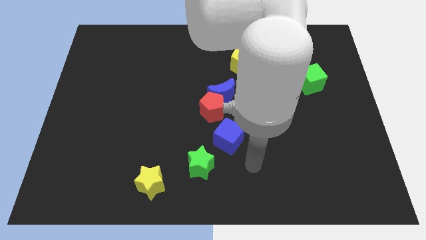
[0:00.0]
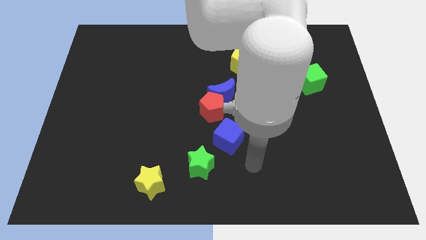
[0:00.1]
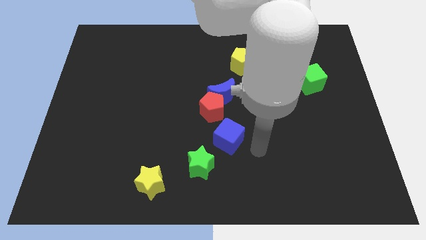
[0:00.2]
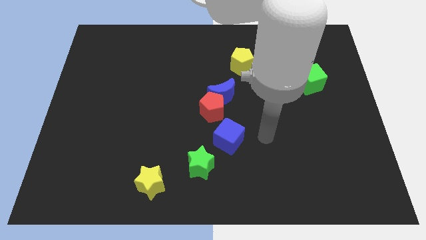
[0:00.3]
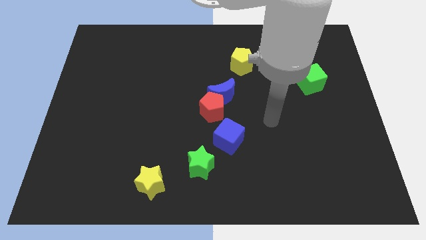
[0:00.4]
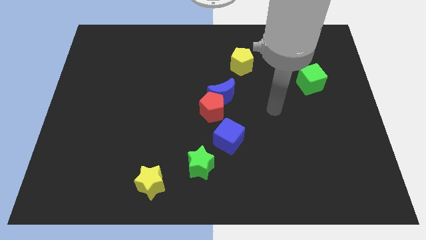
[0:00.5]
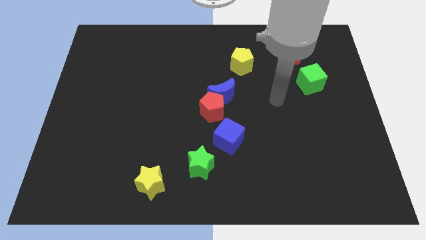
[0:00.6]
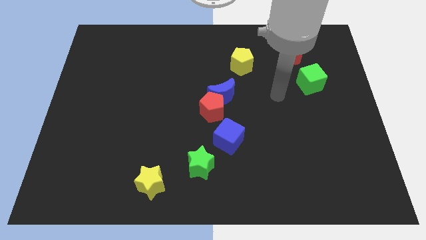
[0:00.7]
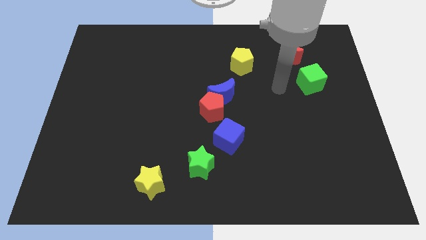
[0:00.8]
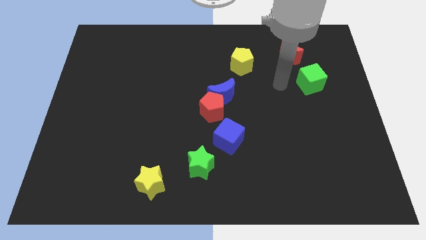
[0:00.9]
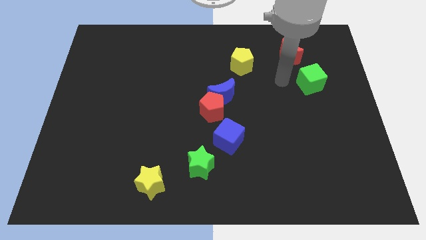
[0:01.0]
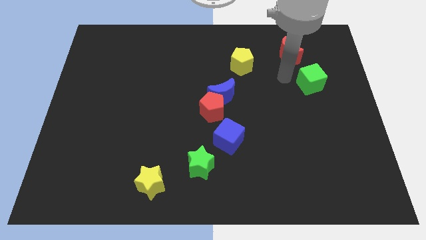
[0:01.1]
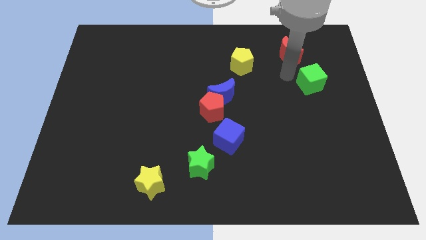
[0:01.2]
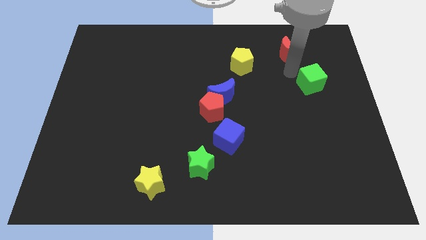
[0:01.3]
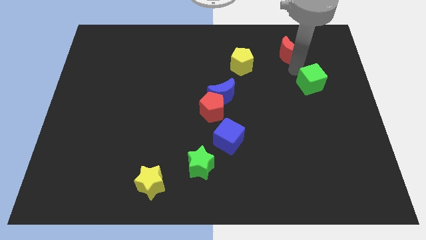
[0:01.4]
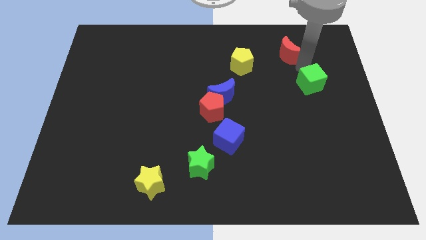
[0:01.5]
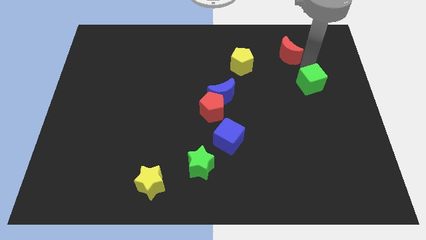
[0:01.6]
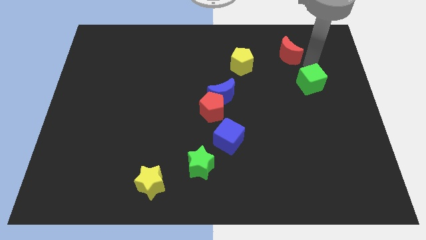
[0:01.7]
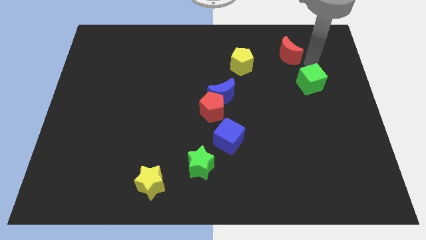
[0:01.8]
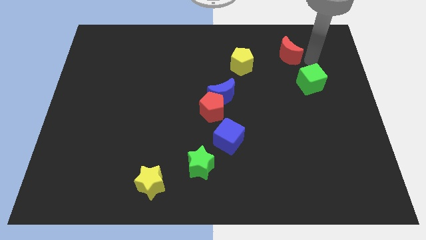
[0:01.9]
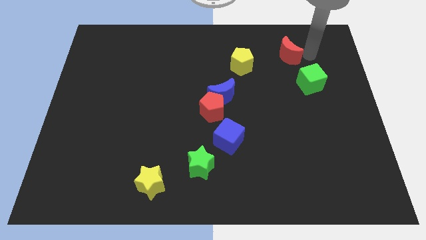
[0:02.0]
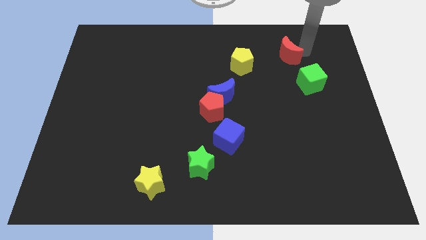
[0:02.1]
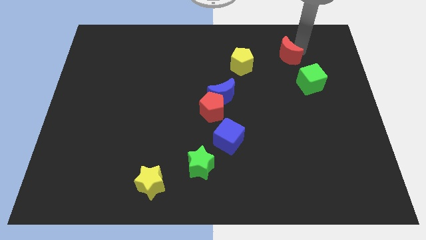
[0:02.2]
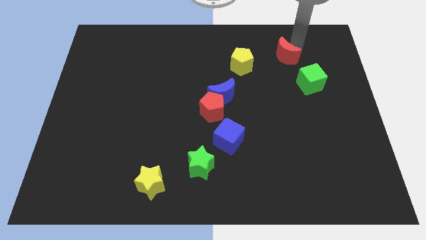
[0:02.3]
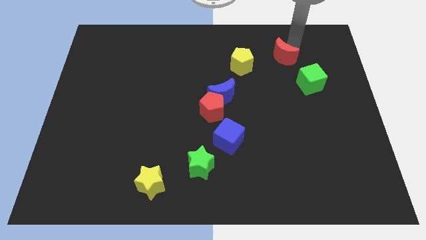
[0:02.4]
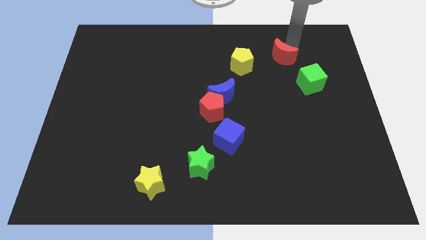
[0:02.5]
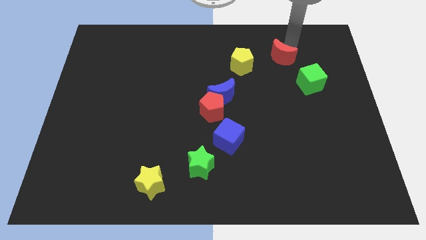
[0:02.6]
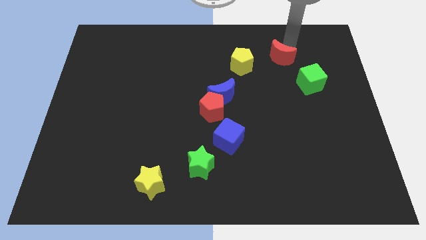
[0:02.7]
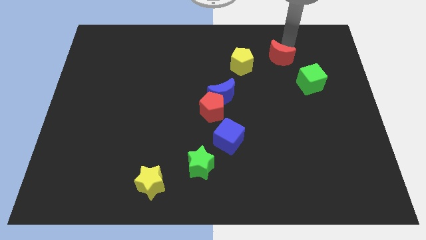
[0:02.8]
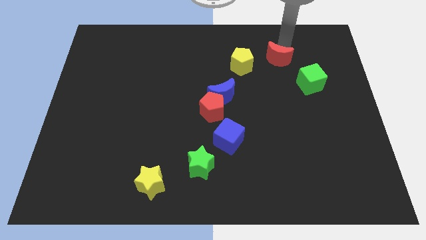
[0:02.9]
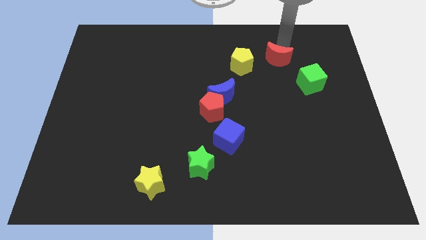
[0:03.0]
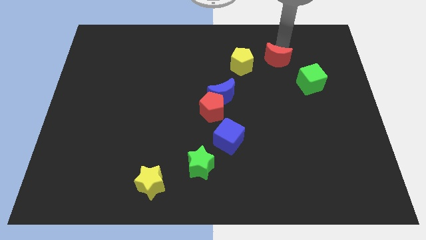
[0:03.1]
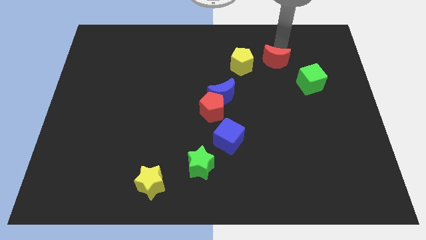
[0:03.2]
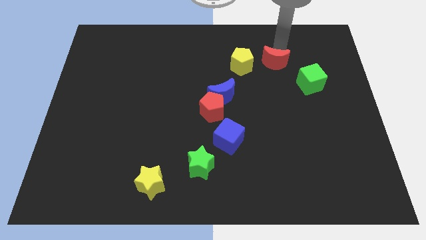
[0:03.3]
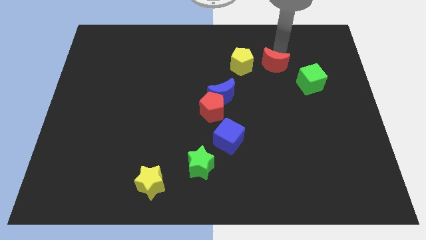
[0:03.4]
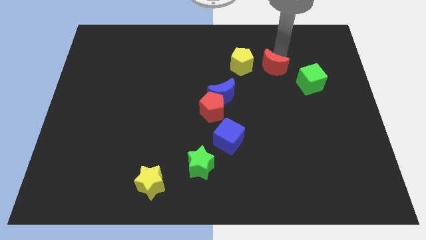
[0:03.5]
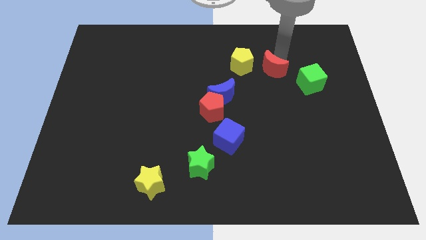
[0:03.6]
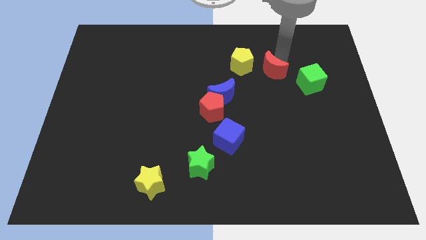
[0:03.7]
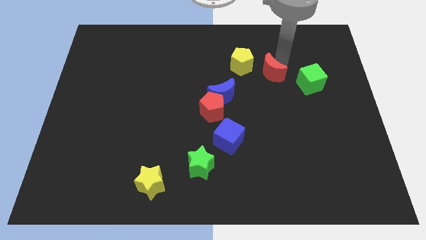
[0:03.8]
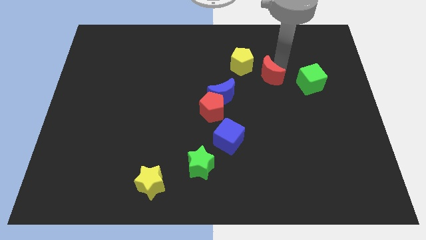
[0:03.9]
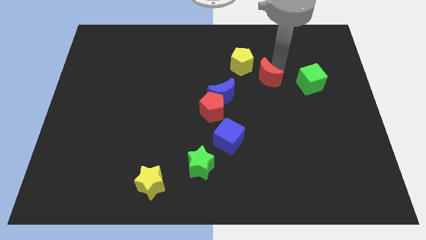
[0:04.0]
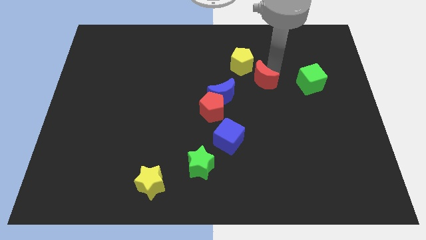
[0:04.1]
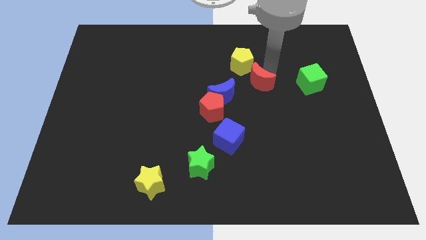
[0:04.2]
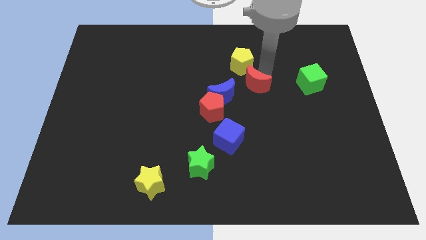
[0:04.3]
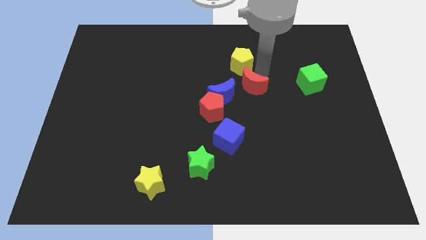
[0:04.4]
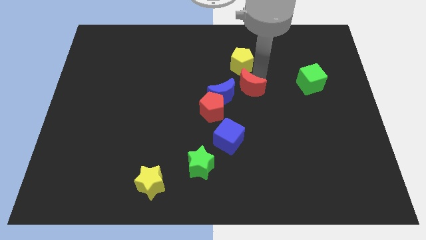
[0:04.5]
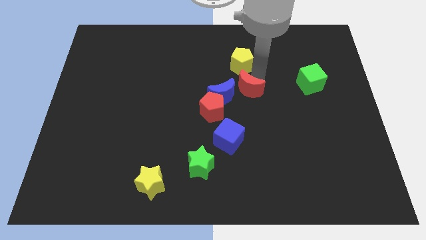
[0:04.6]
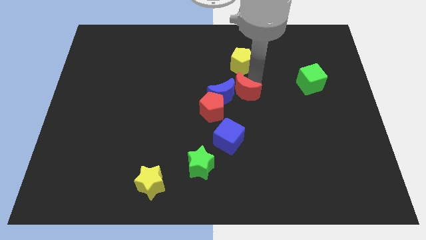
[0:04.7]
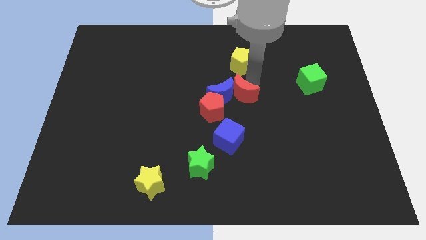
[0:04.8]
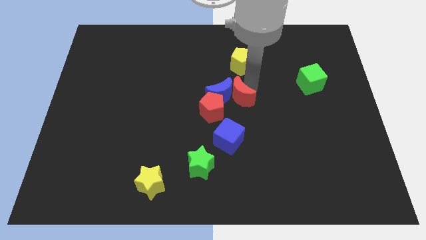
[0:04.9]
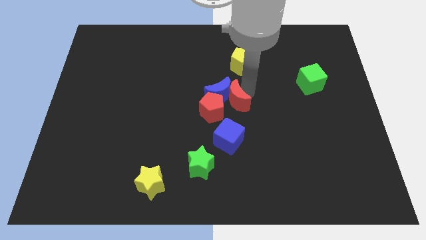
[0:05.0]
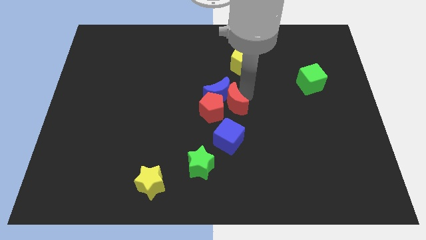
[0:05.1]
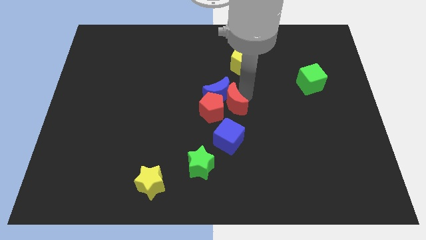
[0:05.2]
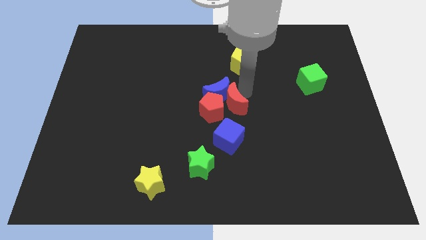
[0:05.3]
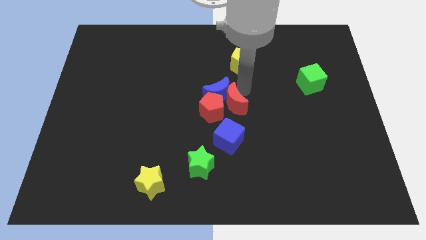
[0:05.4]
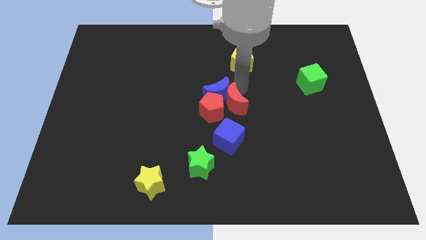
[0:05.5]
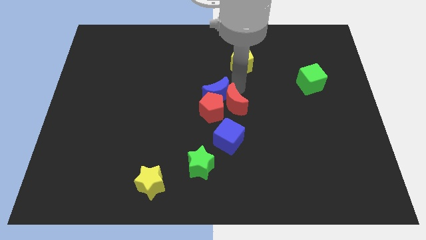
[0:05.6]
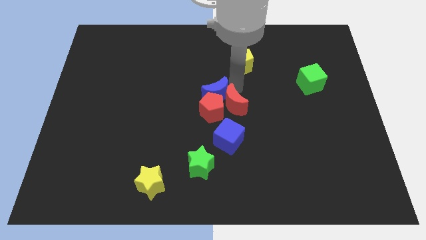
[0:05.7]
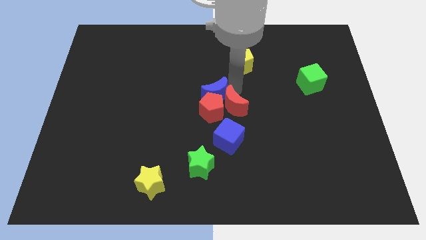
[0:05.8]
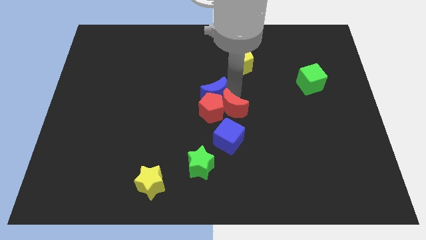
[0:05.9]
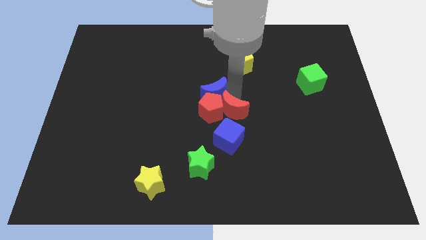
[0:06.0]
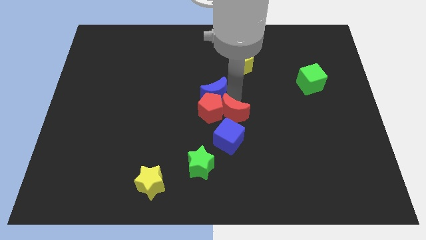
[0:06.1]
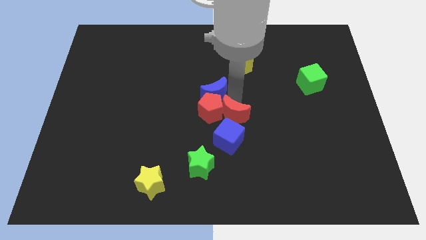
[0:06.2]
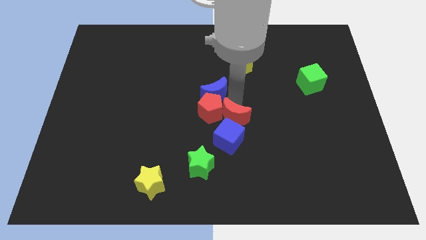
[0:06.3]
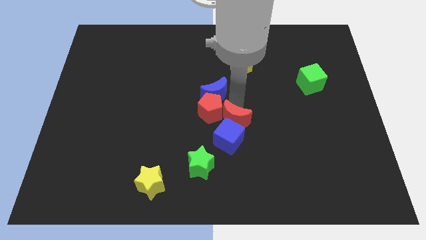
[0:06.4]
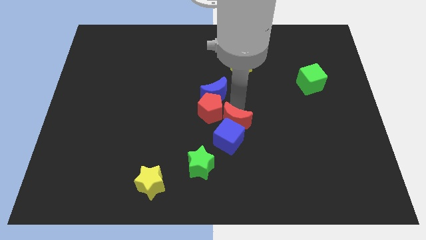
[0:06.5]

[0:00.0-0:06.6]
slide the red moon towards the blue cube

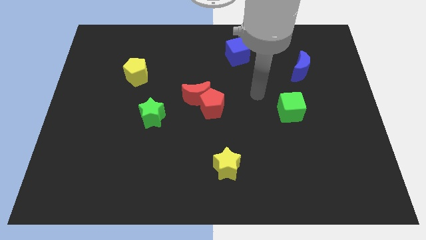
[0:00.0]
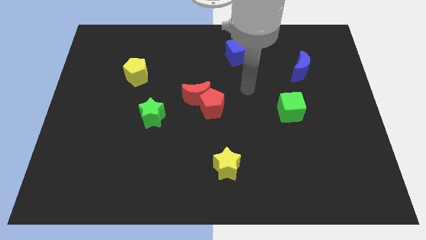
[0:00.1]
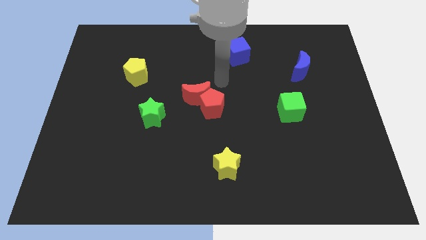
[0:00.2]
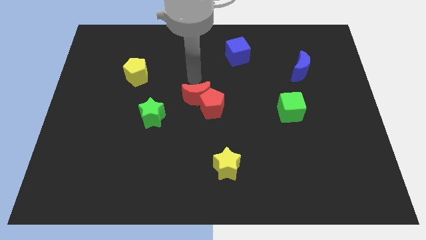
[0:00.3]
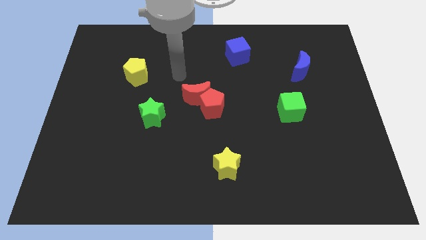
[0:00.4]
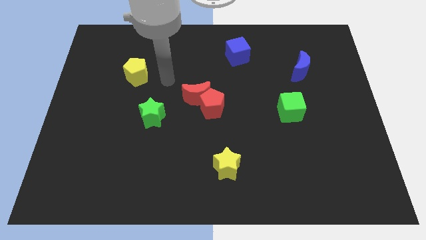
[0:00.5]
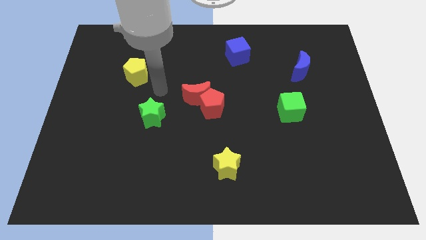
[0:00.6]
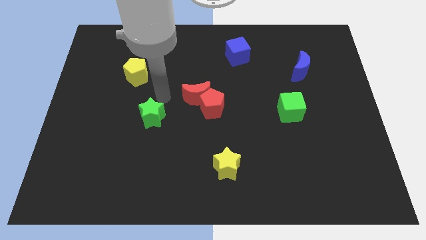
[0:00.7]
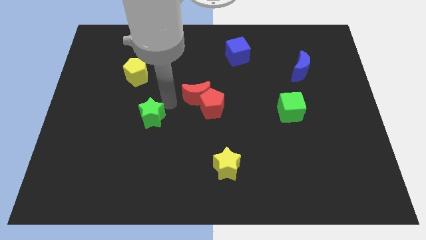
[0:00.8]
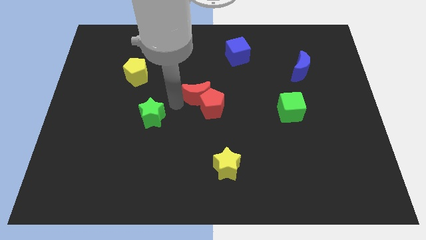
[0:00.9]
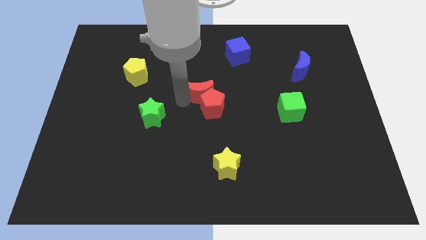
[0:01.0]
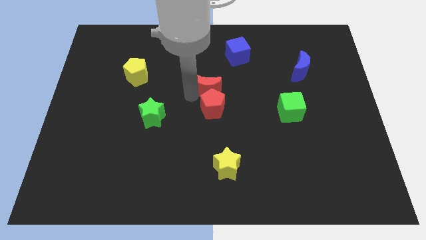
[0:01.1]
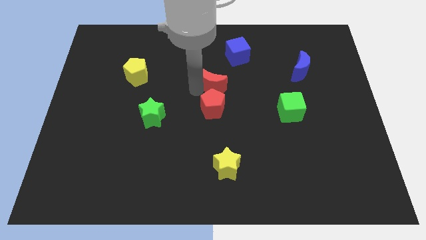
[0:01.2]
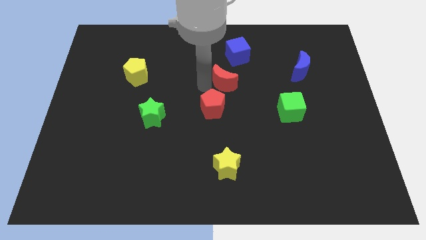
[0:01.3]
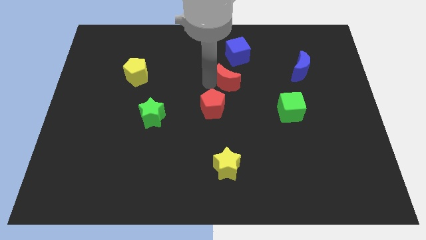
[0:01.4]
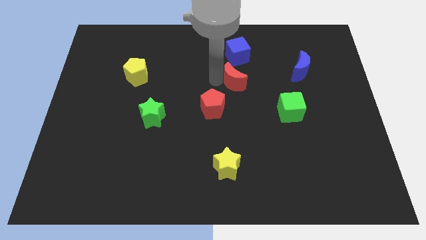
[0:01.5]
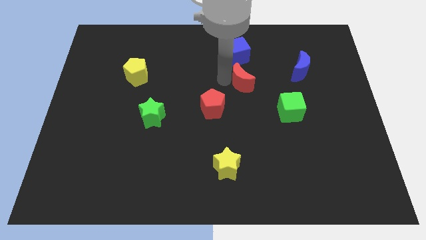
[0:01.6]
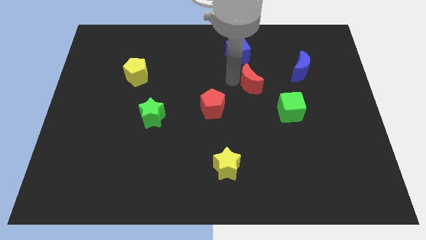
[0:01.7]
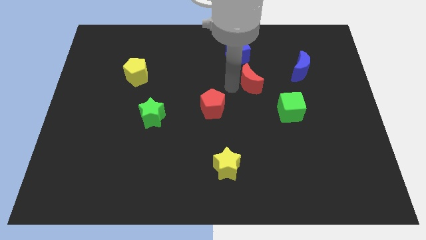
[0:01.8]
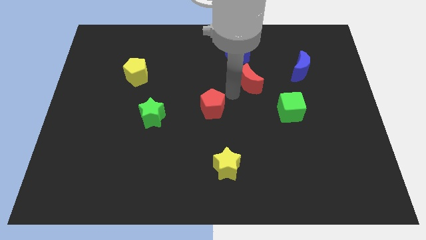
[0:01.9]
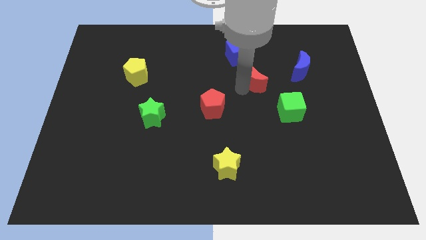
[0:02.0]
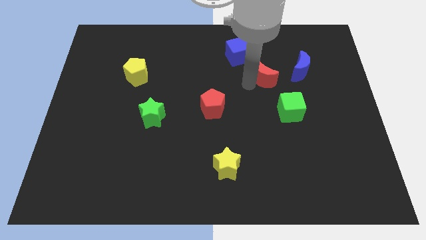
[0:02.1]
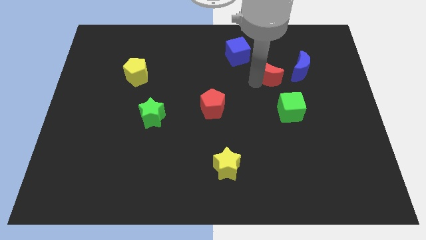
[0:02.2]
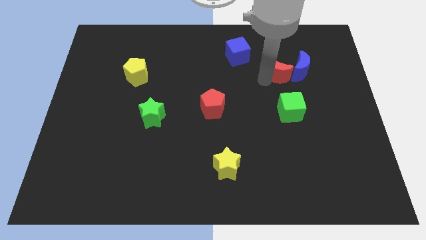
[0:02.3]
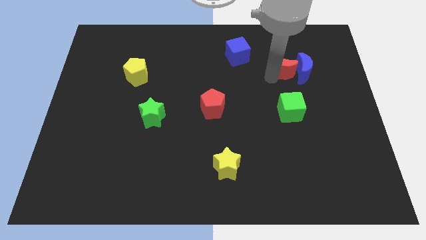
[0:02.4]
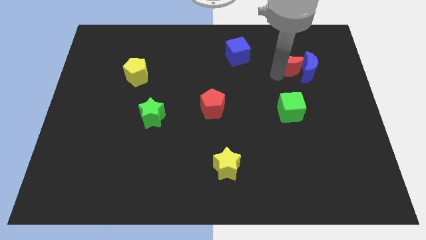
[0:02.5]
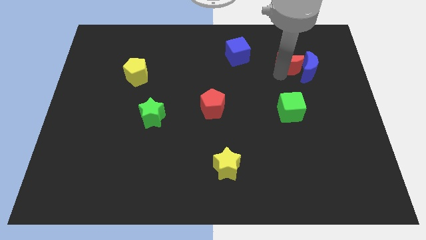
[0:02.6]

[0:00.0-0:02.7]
slide the red moon next to the blue moon
